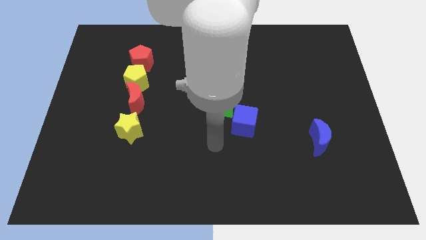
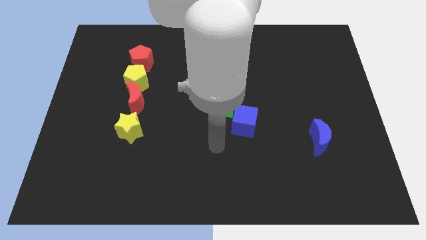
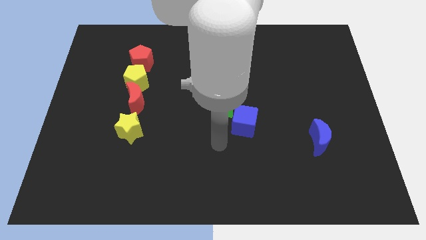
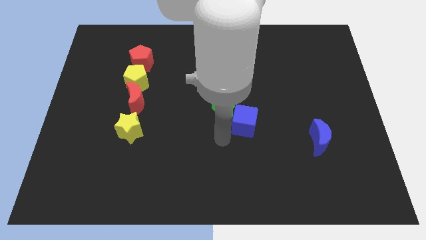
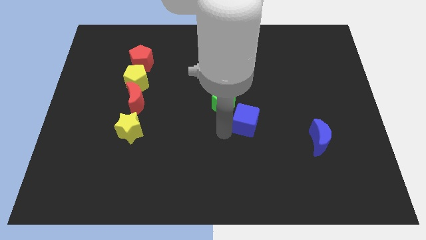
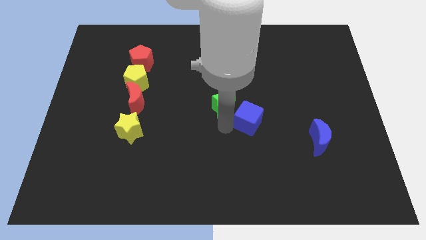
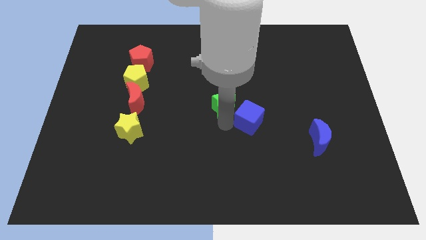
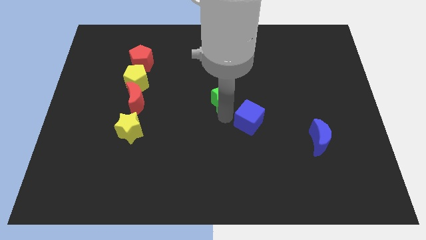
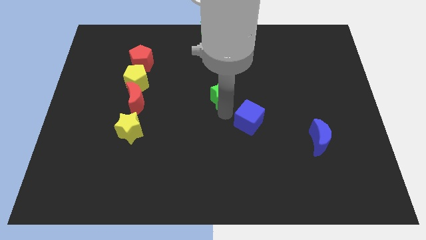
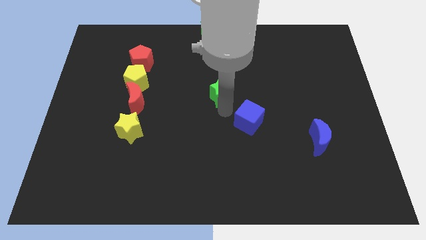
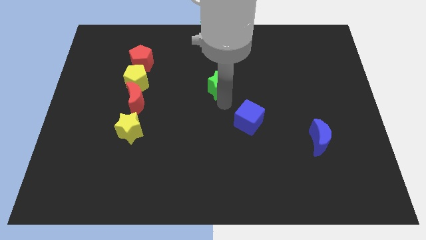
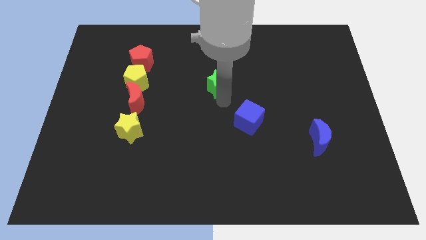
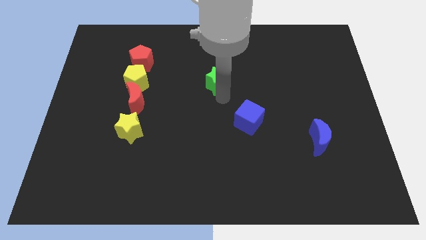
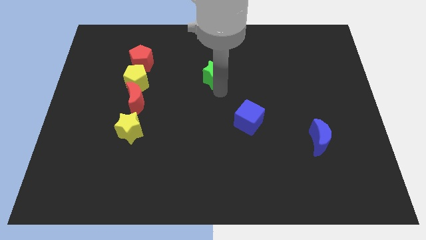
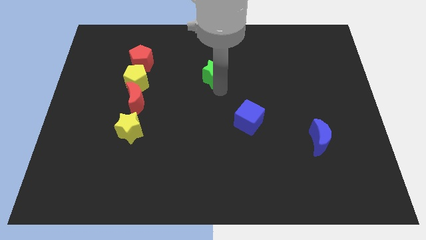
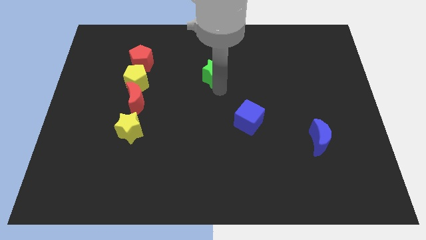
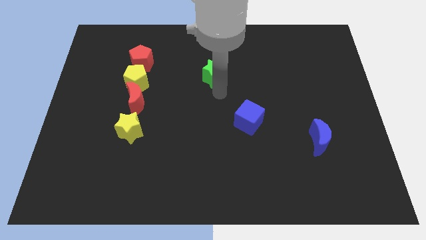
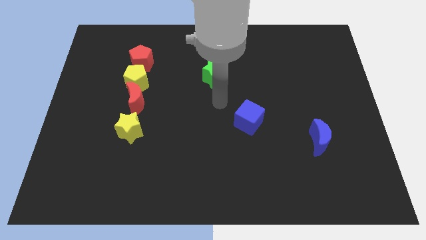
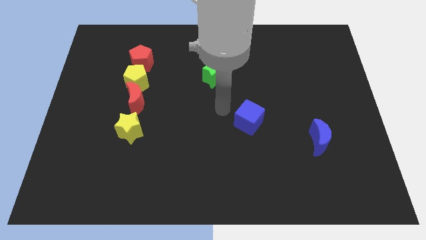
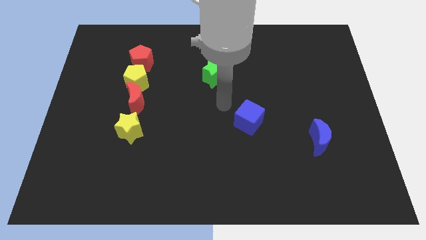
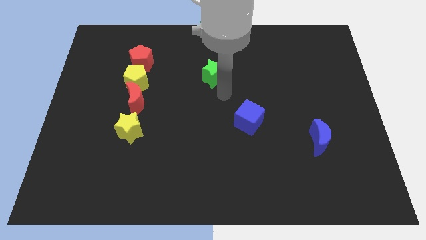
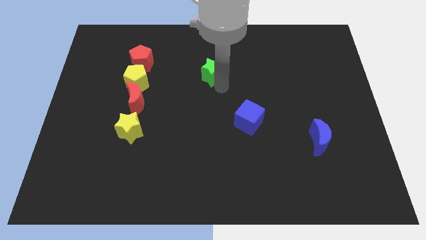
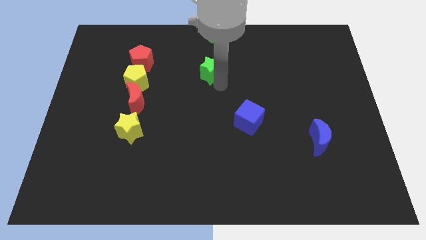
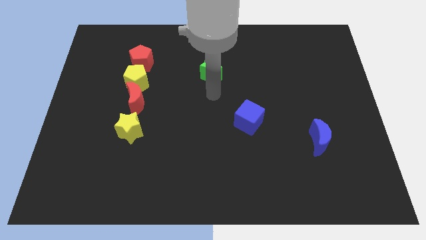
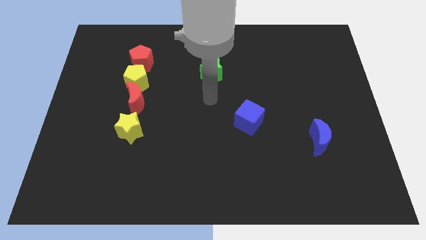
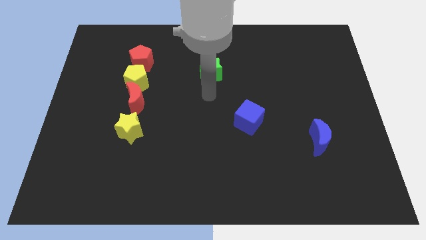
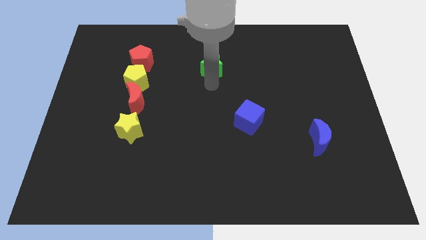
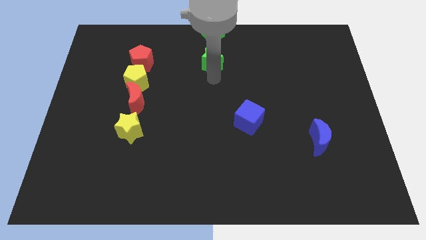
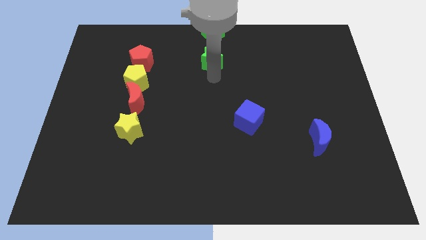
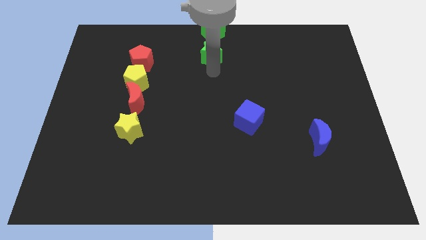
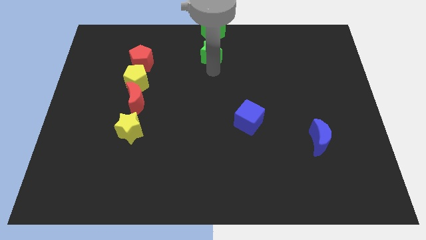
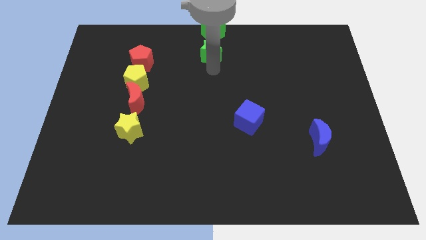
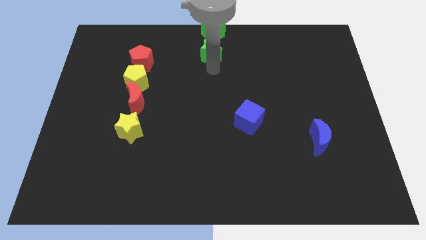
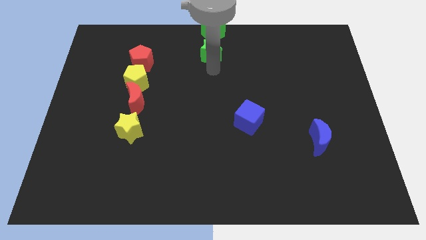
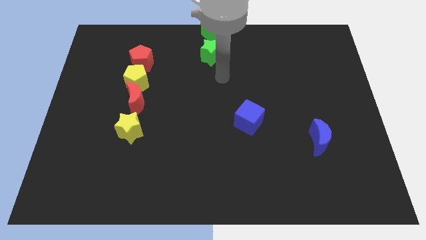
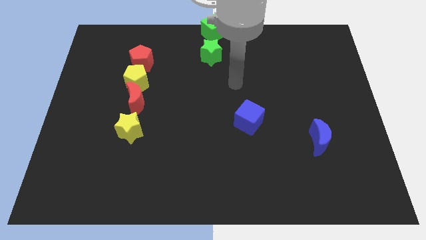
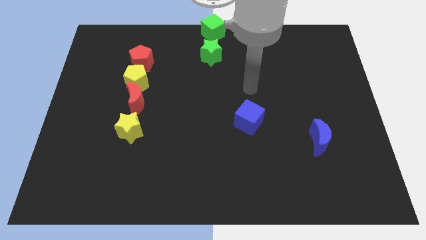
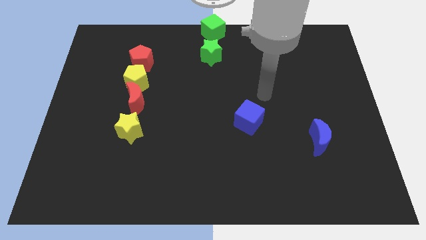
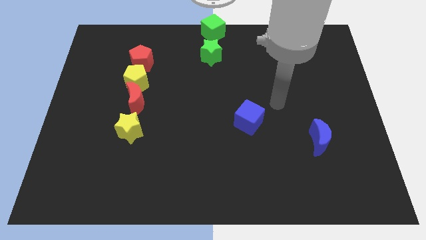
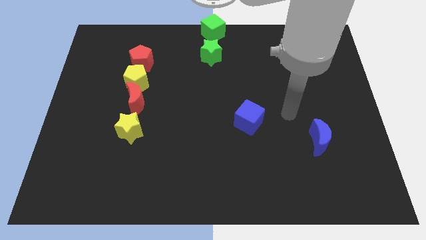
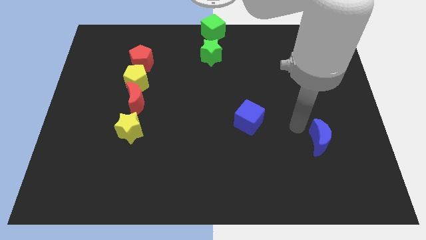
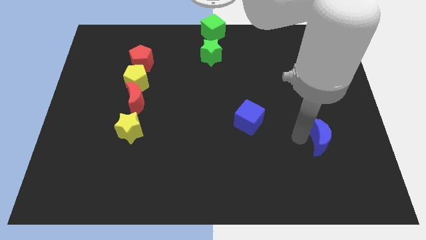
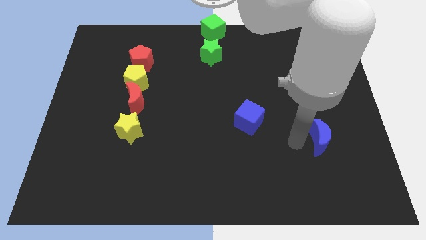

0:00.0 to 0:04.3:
place the green star below the green cube

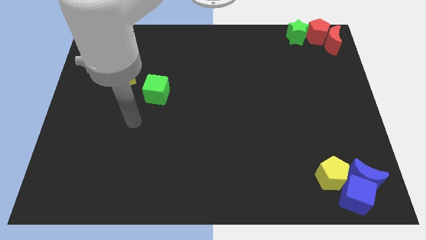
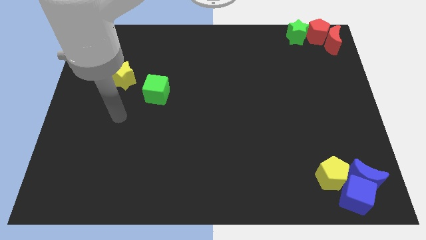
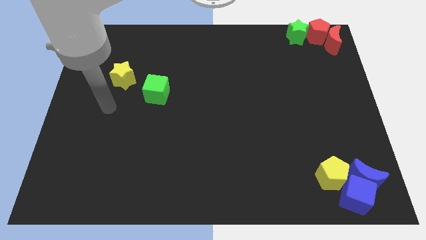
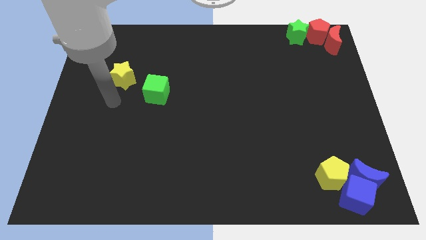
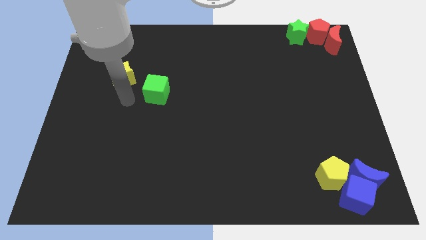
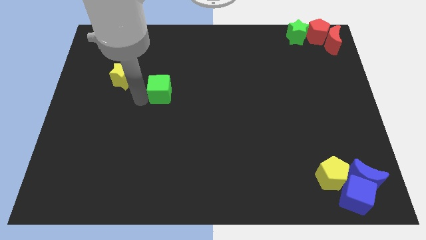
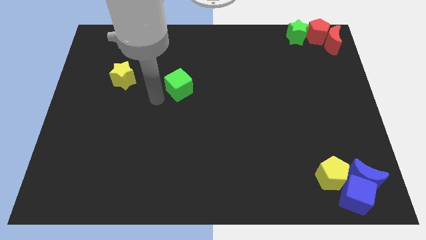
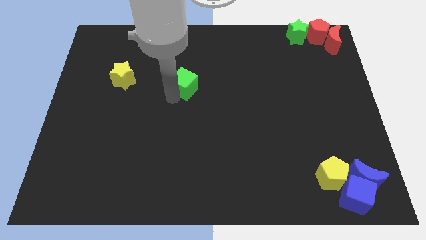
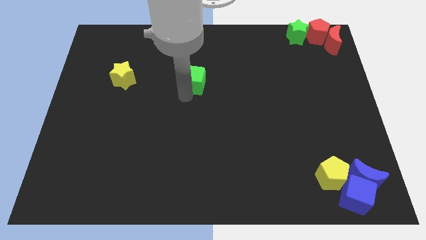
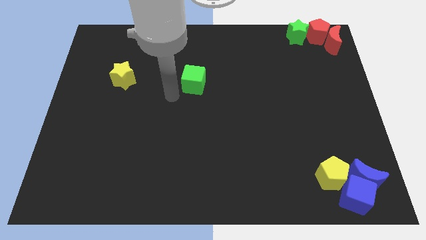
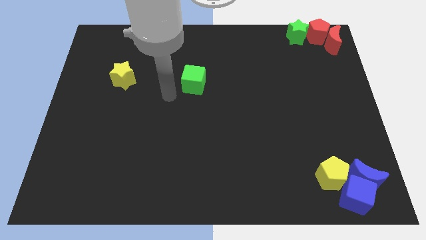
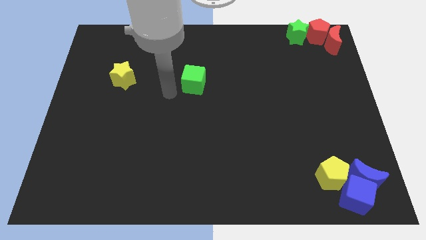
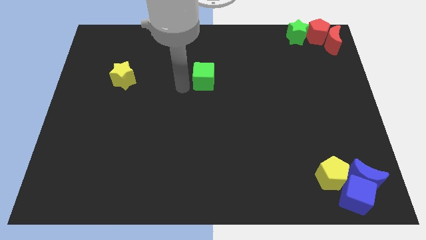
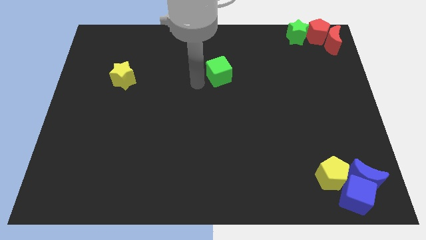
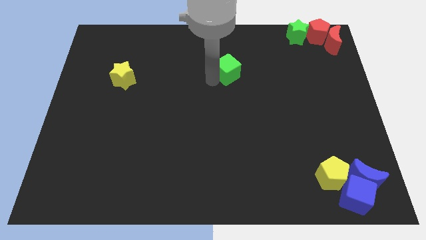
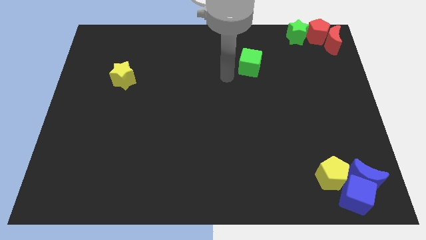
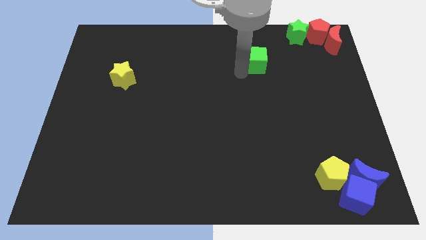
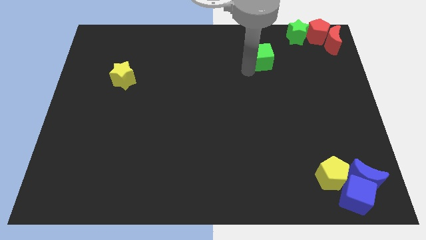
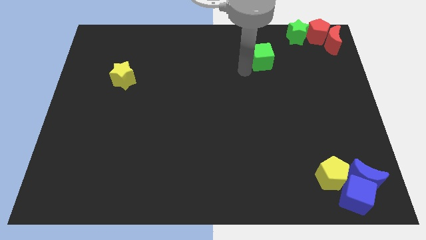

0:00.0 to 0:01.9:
push the green cube towards the green star

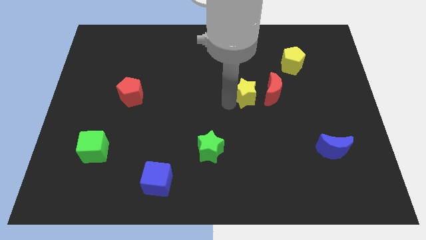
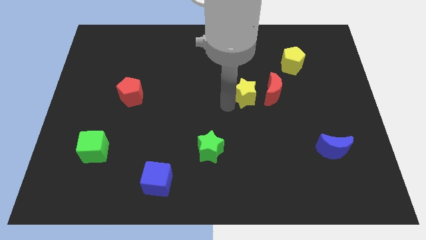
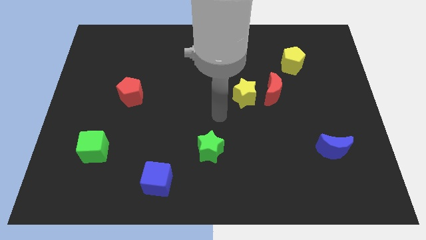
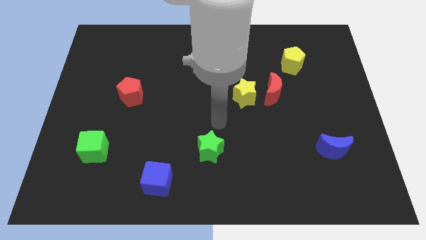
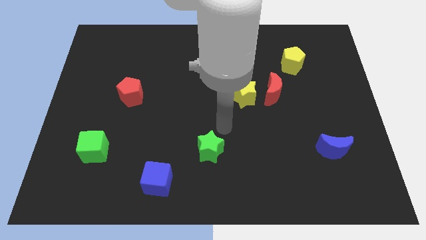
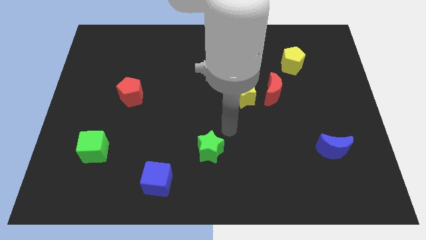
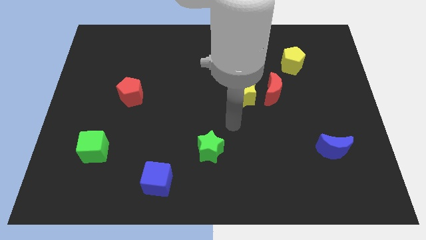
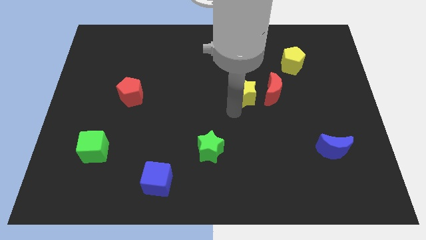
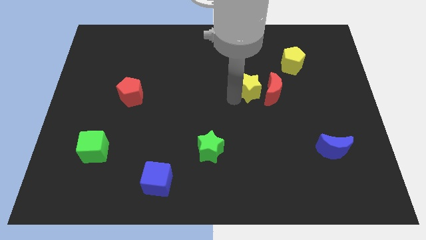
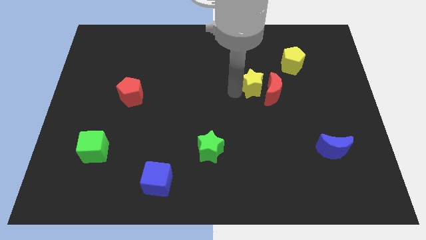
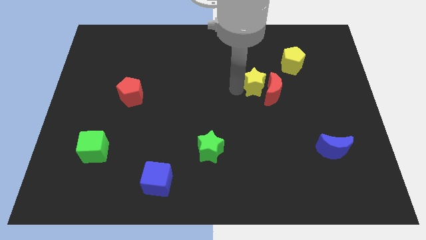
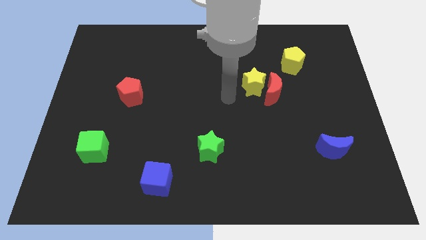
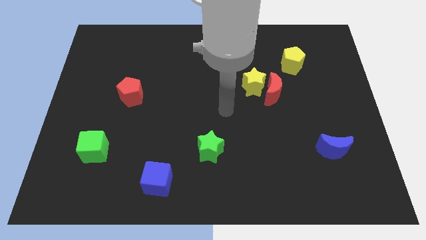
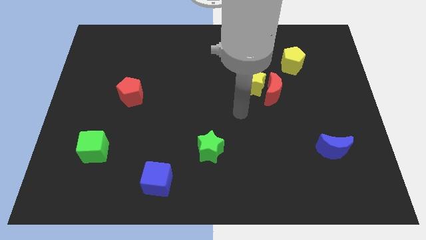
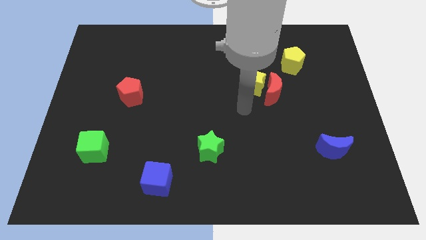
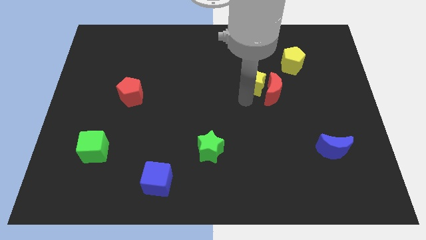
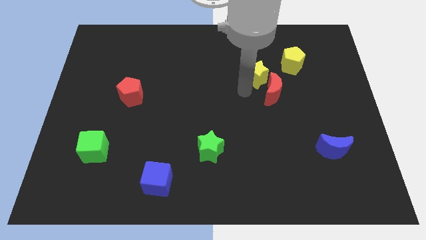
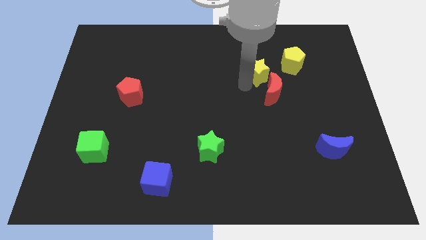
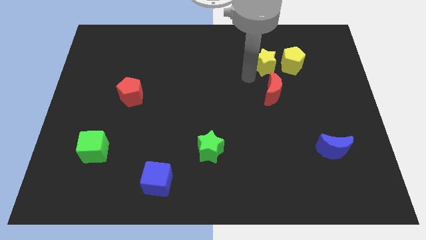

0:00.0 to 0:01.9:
move the yellow star to the left of the yellow pentagon

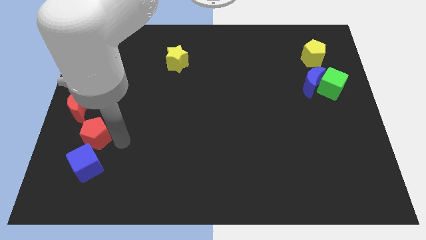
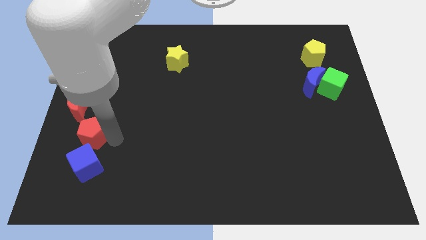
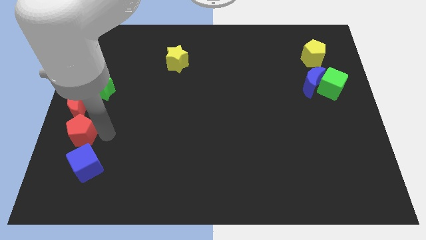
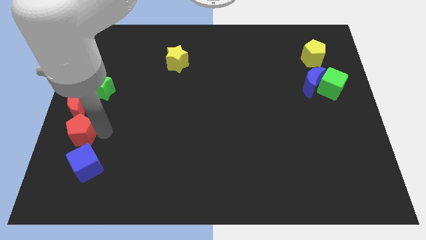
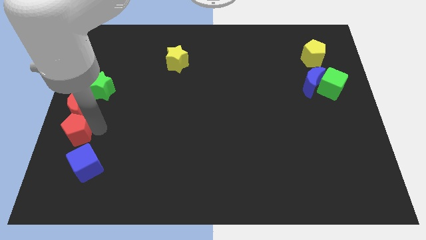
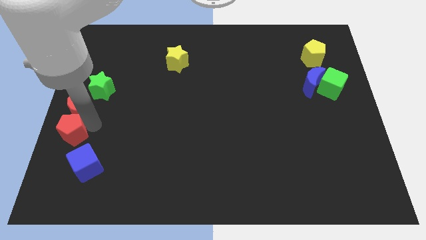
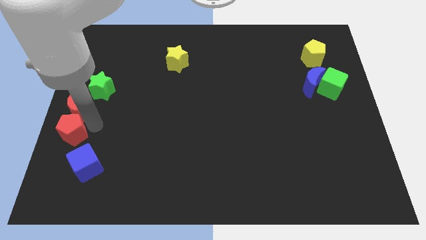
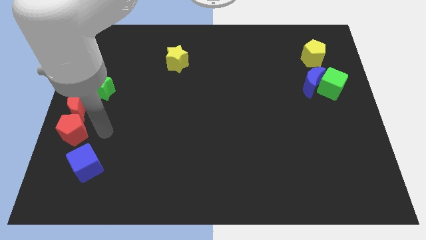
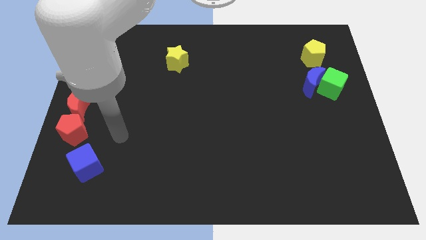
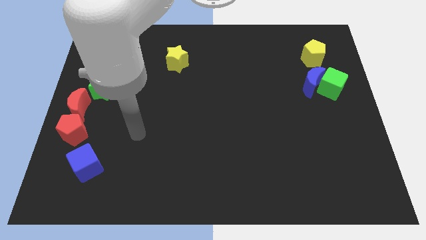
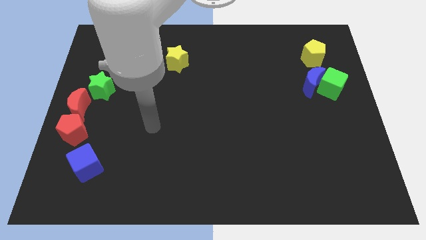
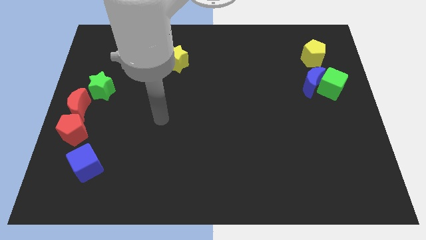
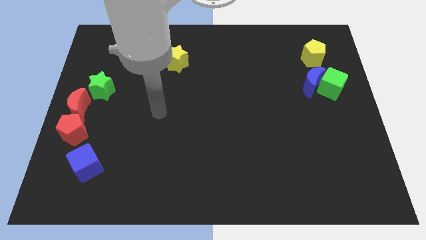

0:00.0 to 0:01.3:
place the red pentagon below the red crescent
